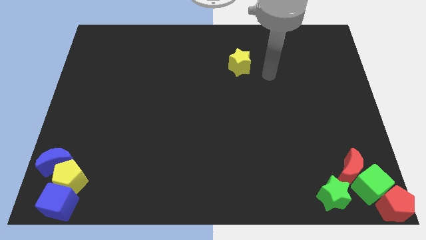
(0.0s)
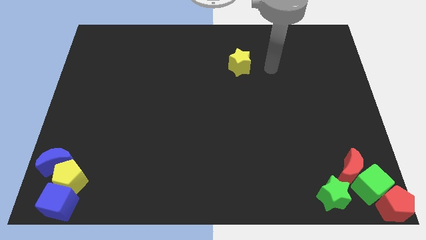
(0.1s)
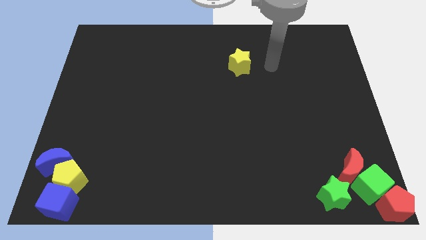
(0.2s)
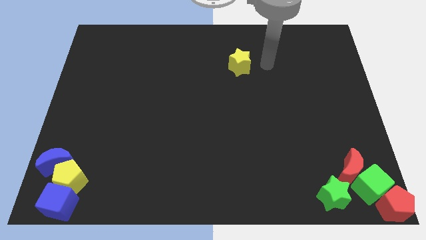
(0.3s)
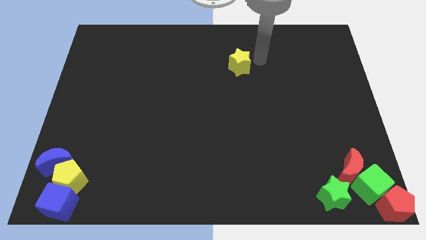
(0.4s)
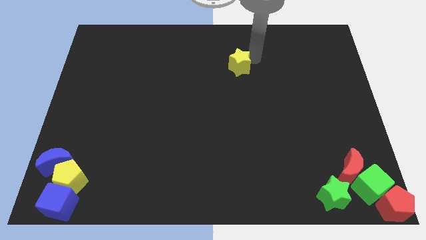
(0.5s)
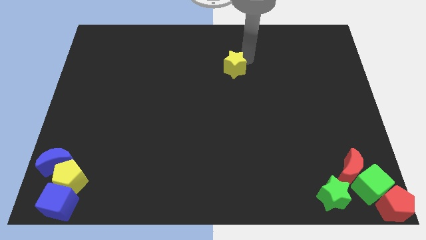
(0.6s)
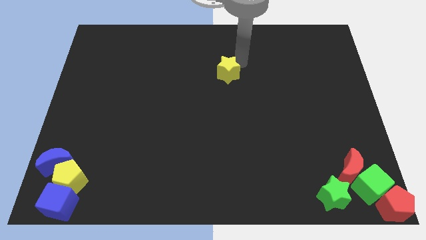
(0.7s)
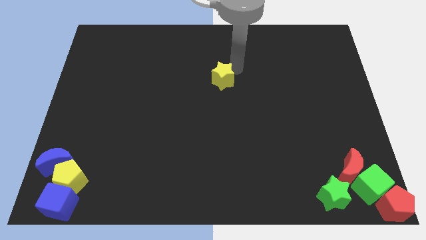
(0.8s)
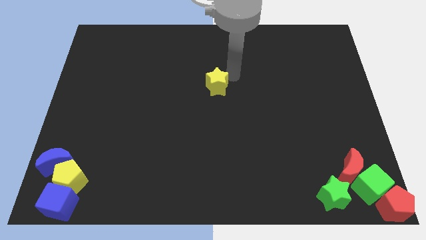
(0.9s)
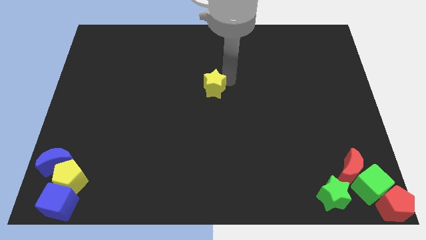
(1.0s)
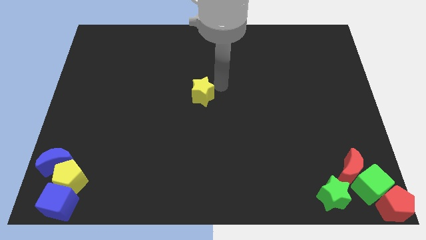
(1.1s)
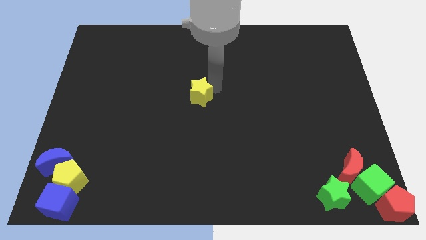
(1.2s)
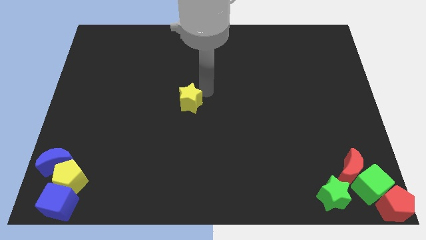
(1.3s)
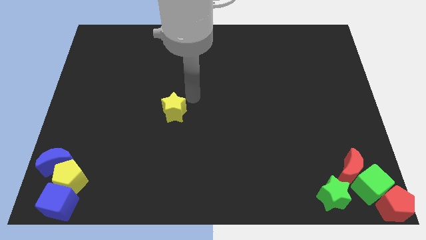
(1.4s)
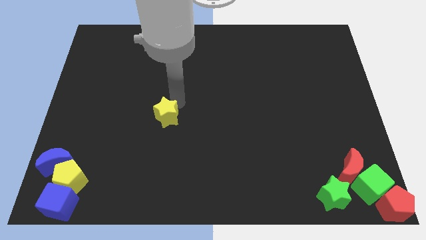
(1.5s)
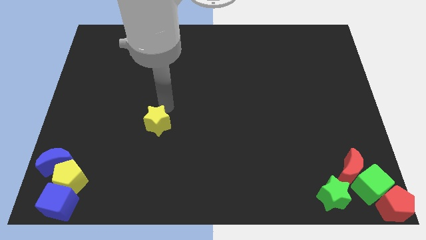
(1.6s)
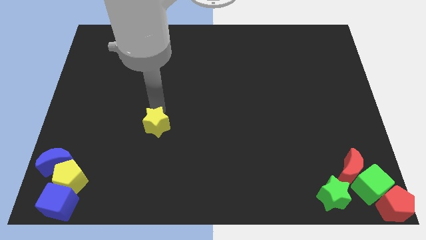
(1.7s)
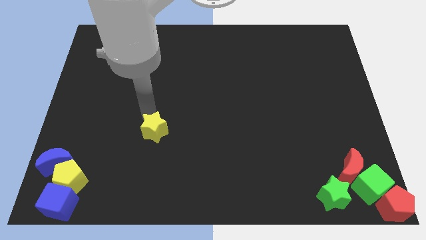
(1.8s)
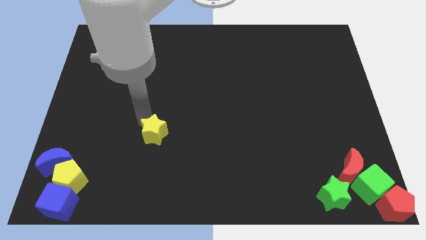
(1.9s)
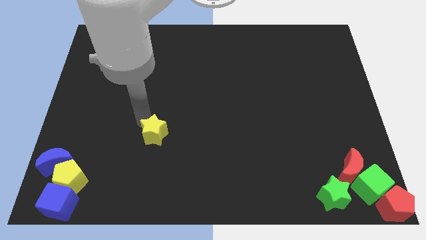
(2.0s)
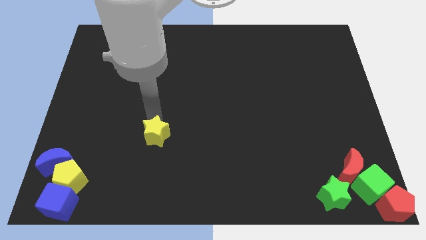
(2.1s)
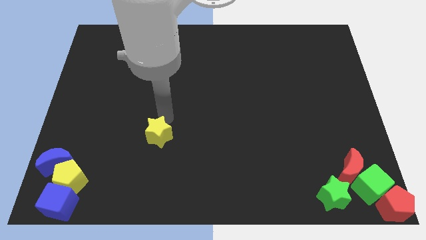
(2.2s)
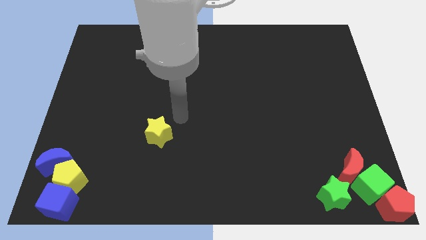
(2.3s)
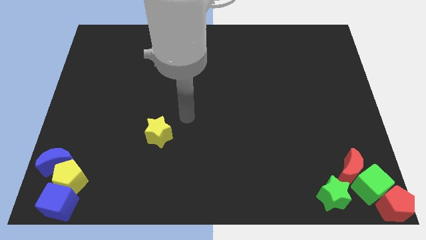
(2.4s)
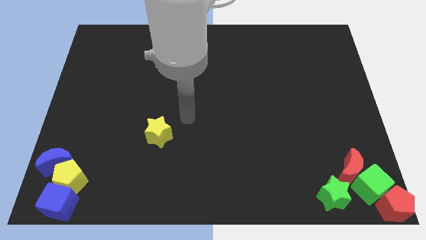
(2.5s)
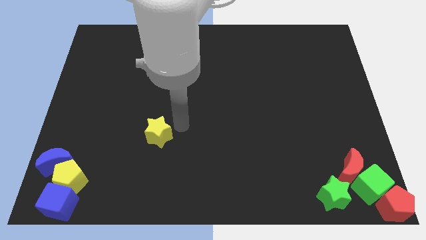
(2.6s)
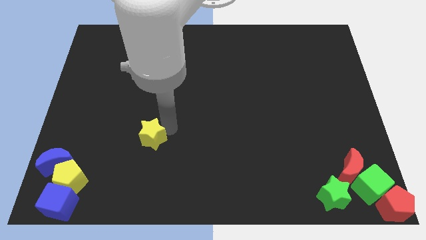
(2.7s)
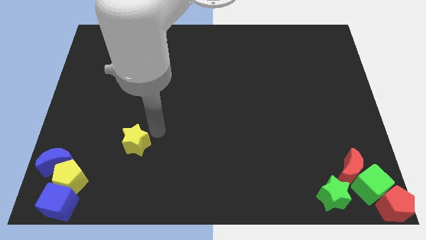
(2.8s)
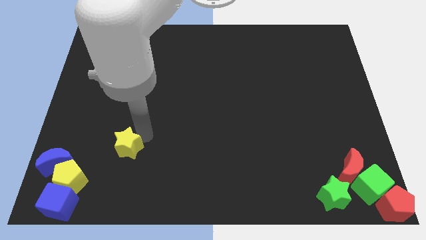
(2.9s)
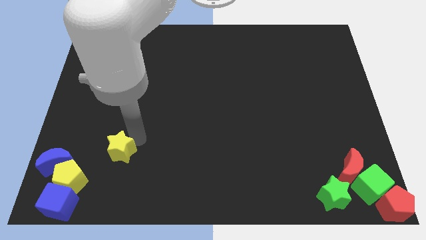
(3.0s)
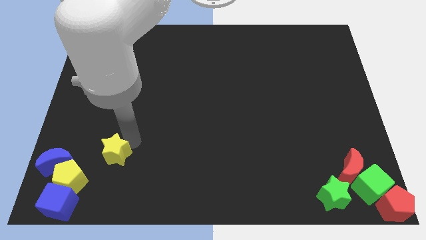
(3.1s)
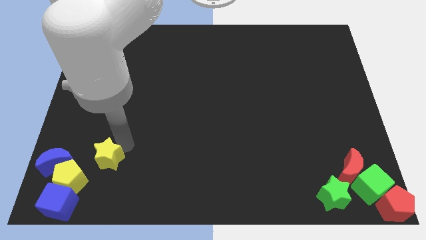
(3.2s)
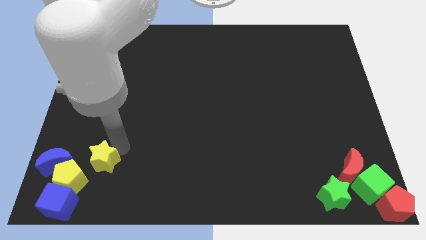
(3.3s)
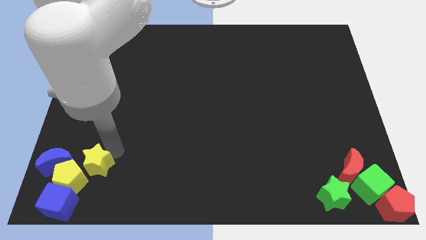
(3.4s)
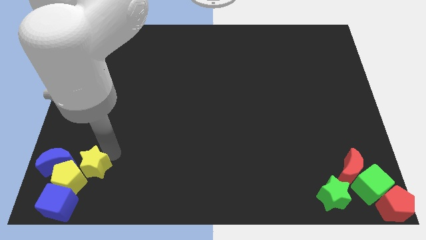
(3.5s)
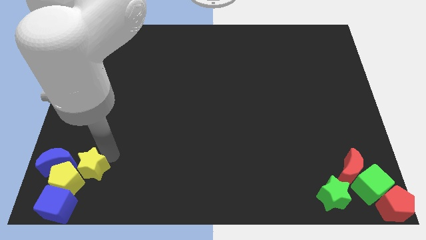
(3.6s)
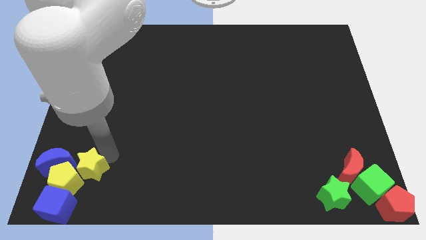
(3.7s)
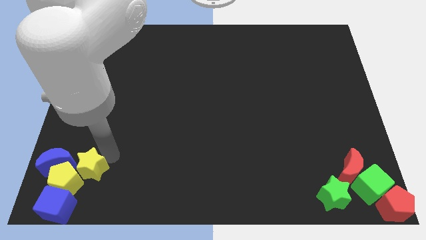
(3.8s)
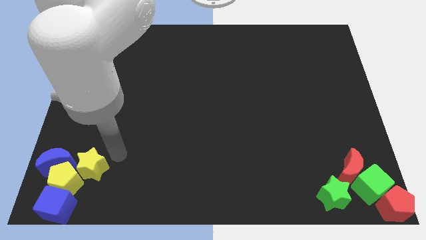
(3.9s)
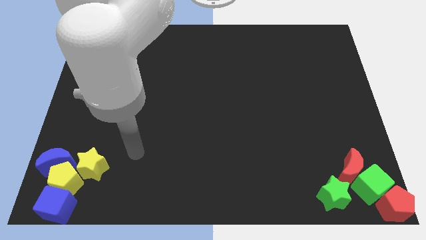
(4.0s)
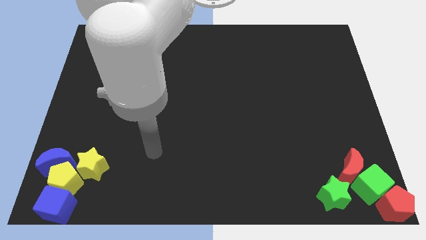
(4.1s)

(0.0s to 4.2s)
place the yellow star at the top right side of the yellow pentagon

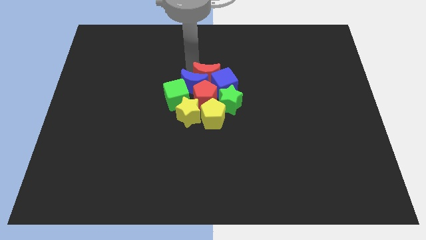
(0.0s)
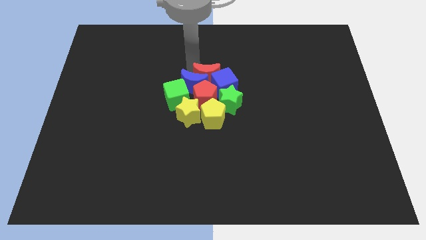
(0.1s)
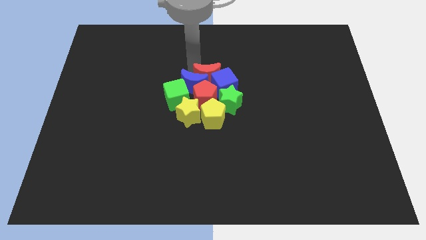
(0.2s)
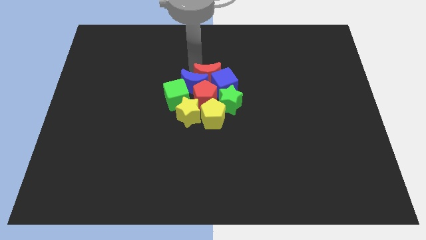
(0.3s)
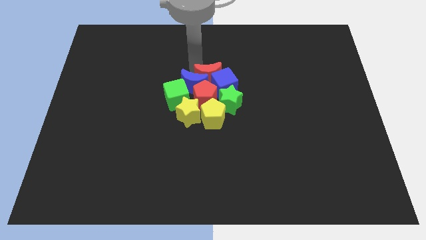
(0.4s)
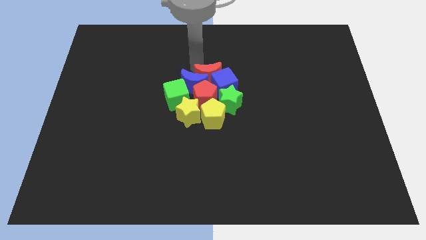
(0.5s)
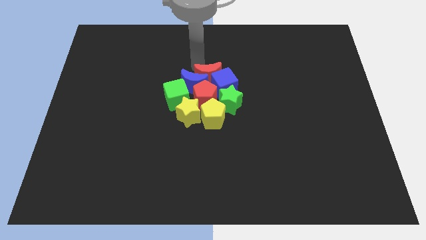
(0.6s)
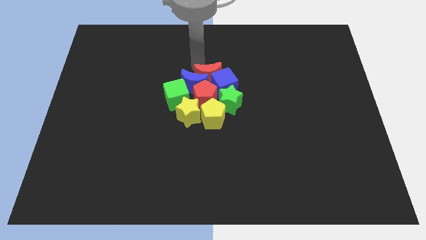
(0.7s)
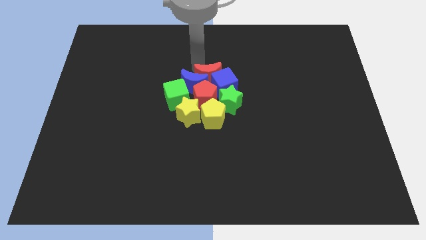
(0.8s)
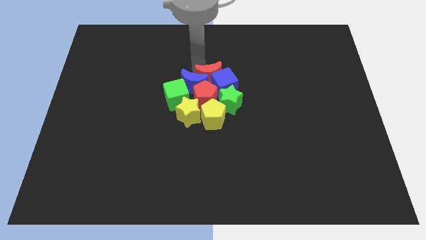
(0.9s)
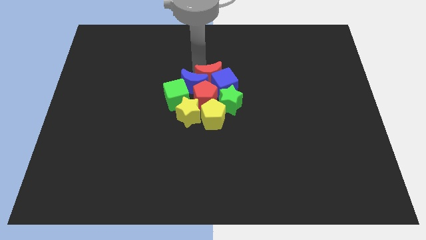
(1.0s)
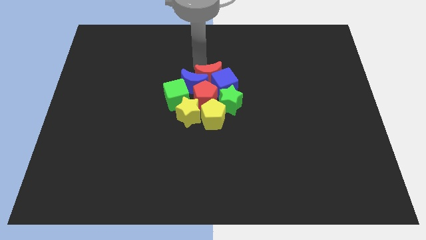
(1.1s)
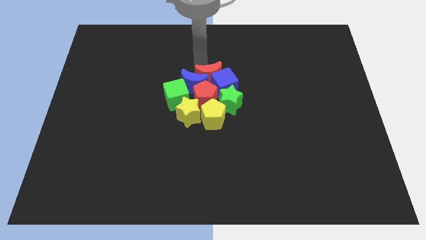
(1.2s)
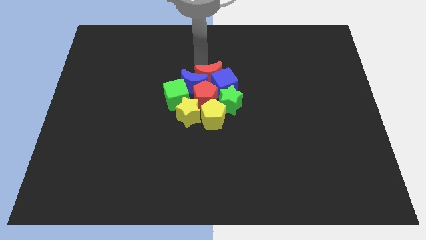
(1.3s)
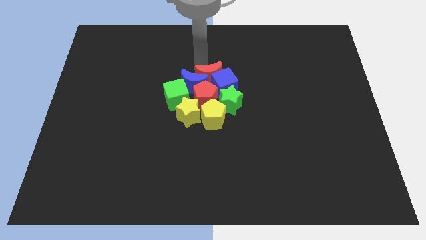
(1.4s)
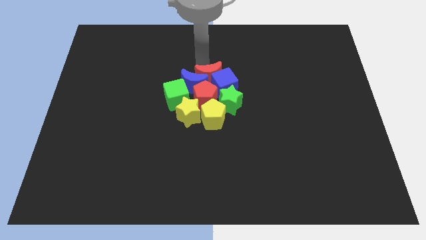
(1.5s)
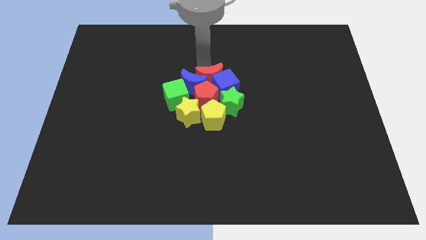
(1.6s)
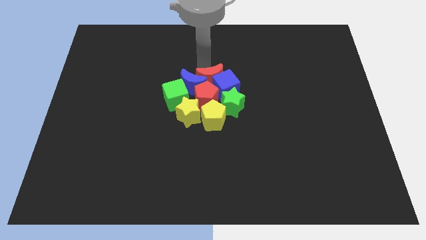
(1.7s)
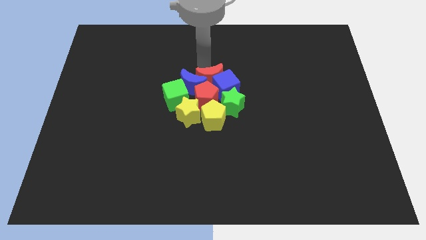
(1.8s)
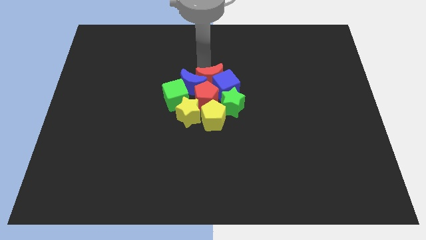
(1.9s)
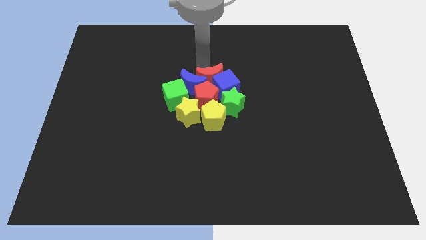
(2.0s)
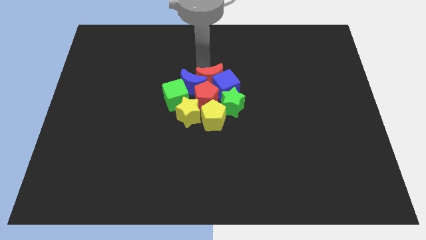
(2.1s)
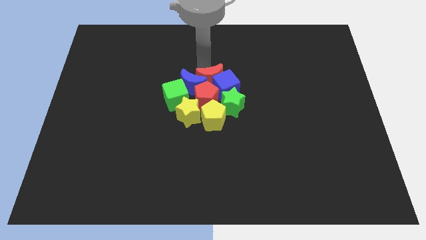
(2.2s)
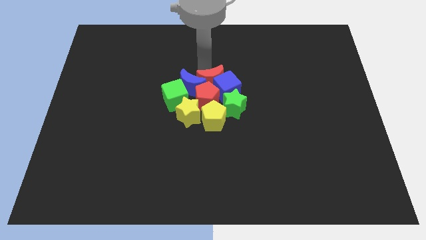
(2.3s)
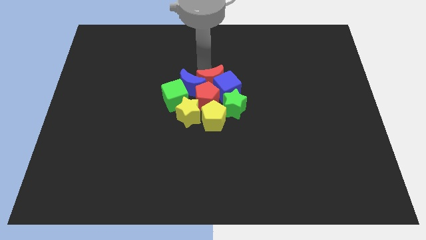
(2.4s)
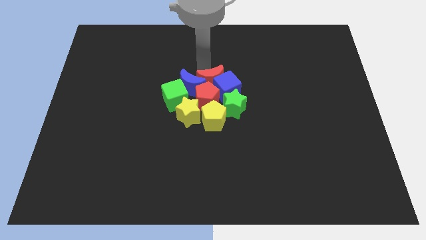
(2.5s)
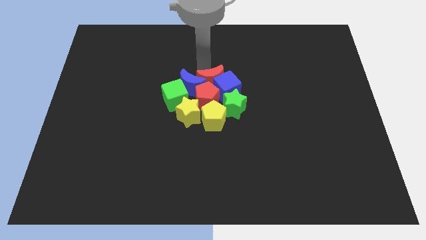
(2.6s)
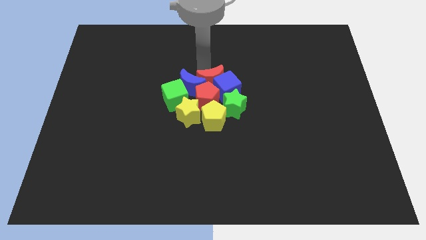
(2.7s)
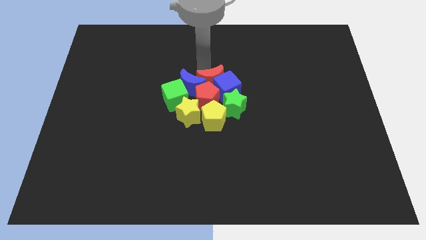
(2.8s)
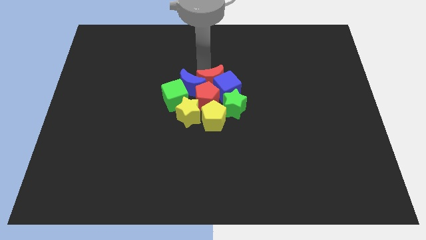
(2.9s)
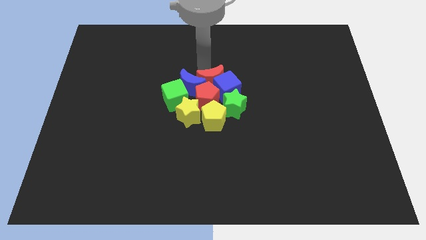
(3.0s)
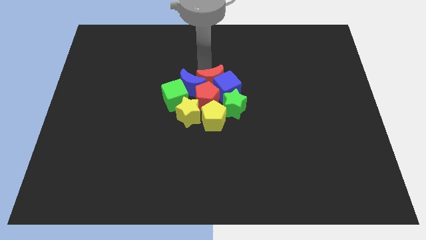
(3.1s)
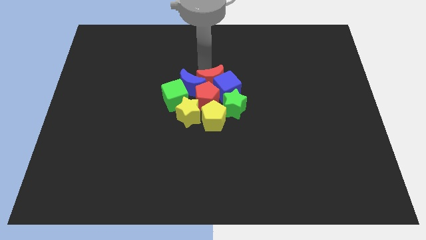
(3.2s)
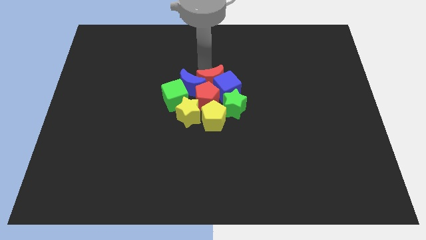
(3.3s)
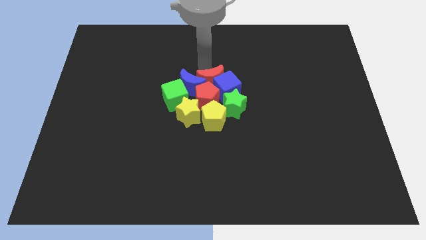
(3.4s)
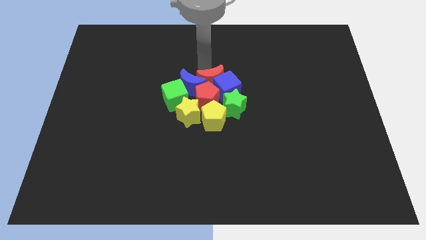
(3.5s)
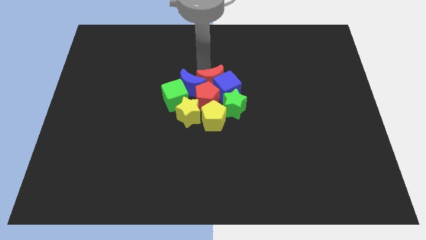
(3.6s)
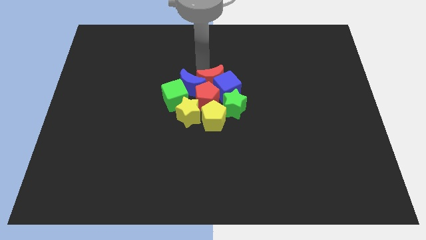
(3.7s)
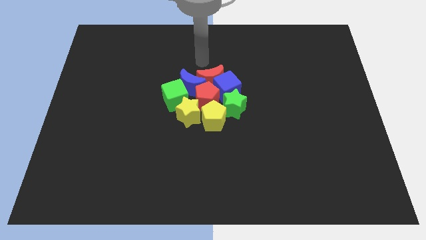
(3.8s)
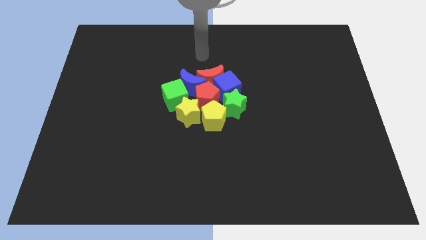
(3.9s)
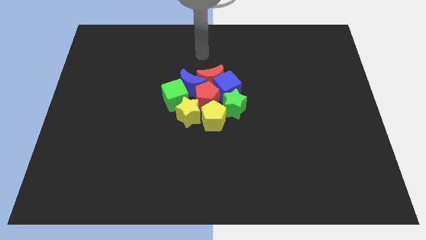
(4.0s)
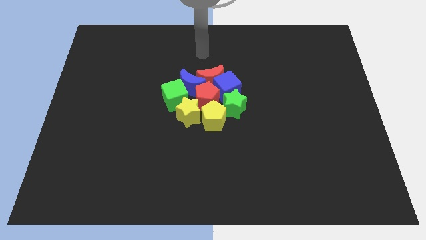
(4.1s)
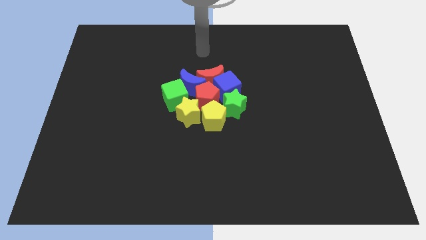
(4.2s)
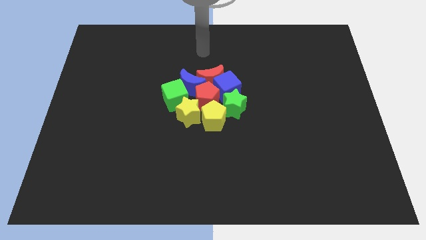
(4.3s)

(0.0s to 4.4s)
move the group of blocks slightly to the center

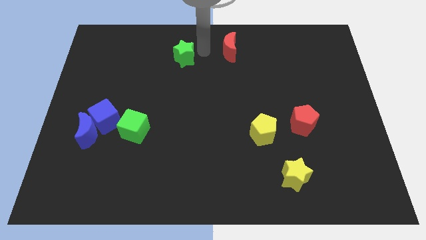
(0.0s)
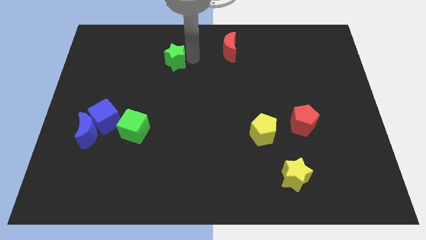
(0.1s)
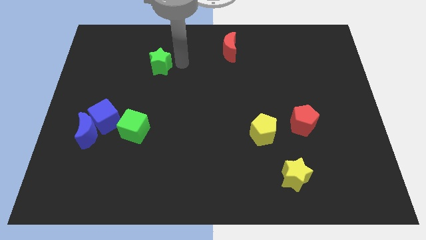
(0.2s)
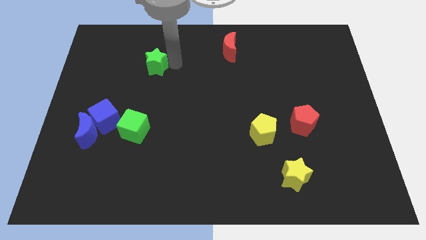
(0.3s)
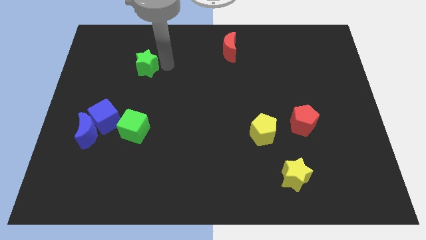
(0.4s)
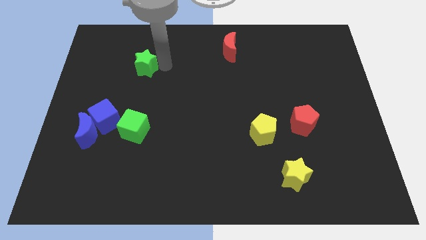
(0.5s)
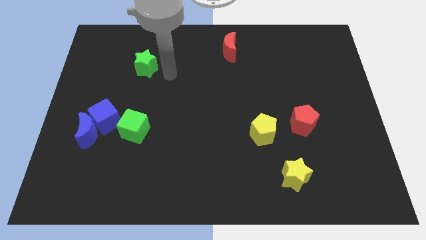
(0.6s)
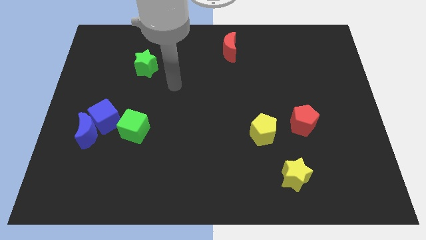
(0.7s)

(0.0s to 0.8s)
place the green star above the green cube
